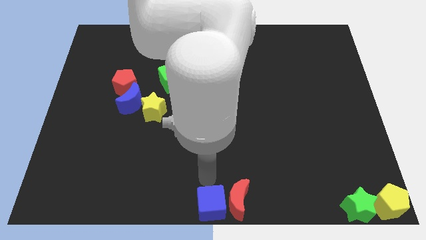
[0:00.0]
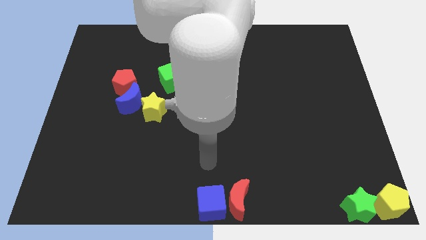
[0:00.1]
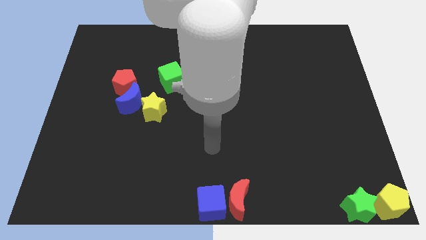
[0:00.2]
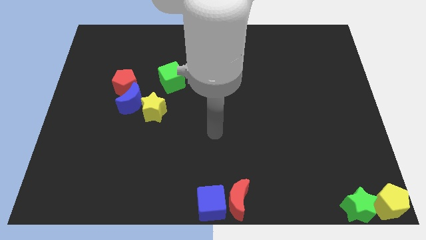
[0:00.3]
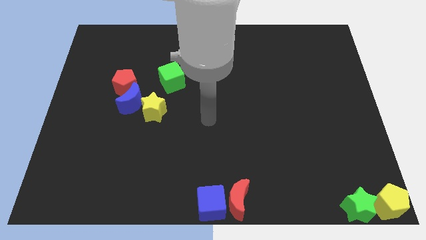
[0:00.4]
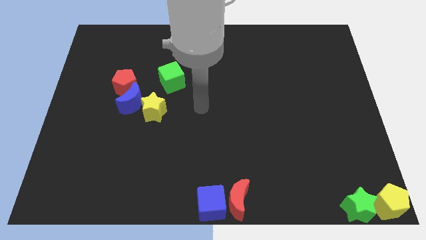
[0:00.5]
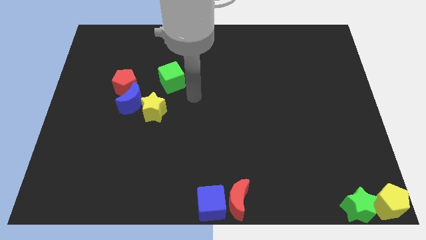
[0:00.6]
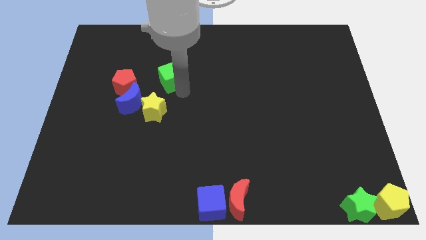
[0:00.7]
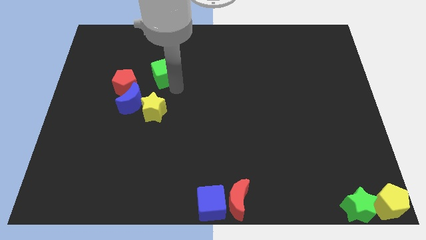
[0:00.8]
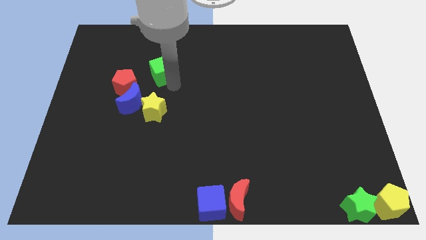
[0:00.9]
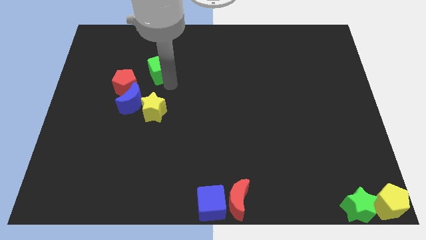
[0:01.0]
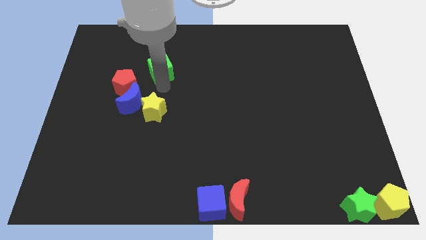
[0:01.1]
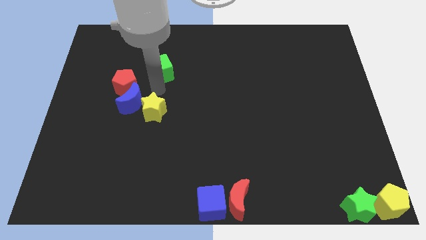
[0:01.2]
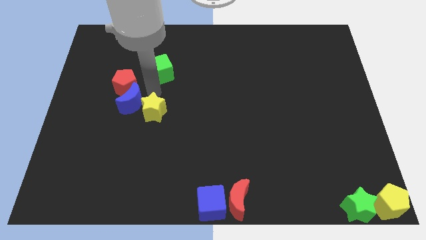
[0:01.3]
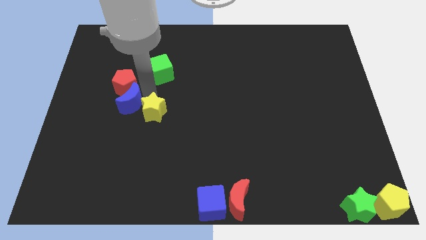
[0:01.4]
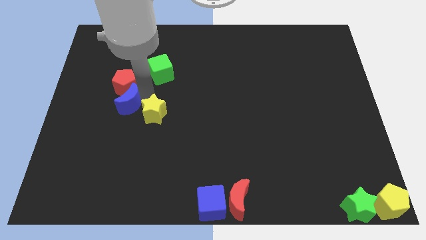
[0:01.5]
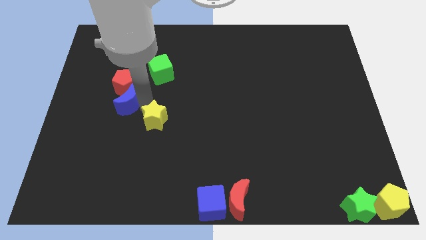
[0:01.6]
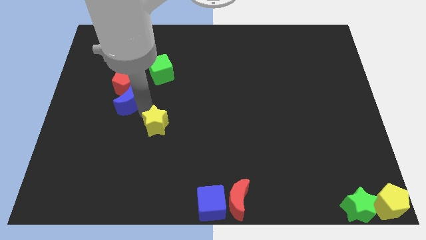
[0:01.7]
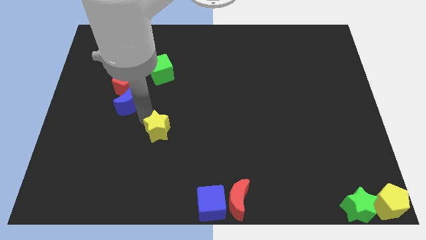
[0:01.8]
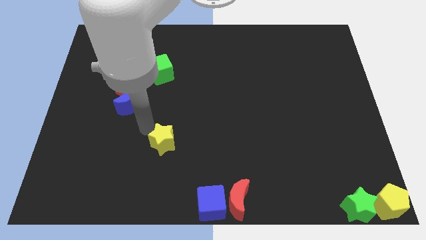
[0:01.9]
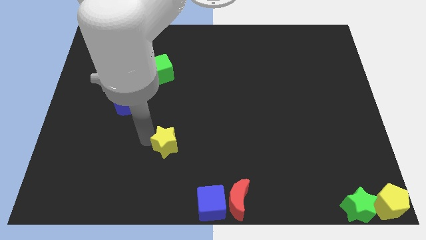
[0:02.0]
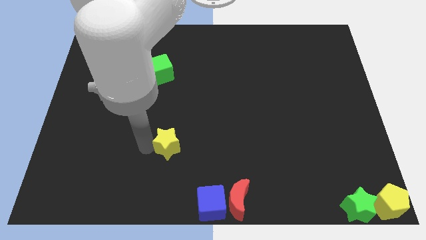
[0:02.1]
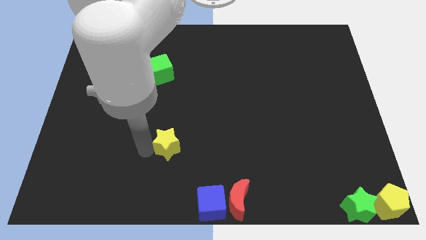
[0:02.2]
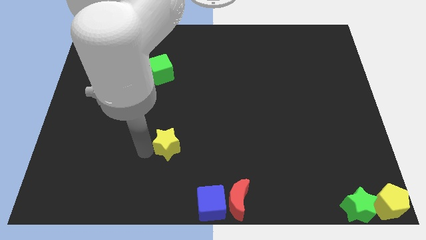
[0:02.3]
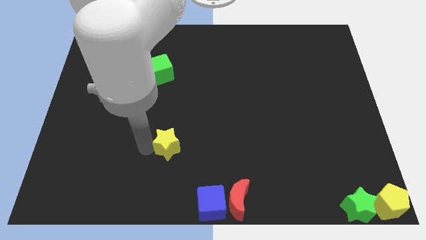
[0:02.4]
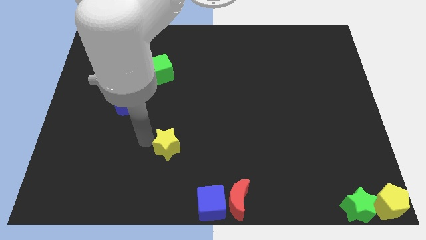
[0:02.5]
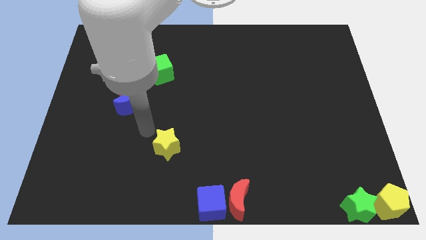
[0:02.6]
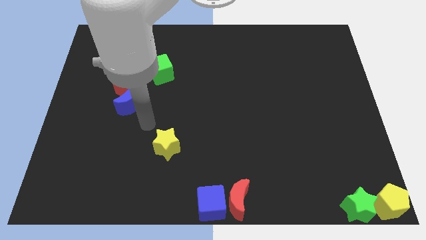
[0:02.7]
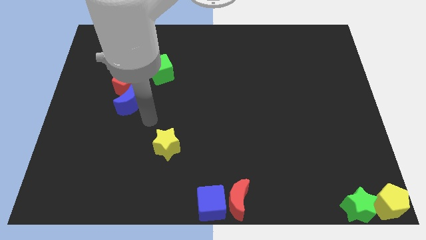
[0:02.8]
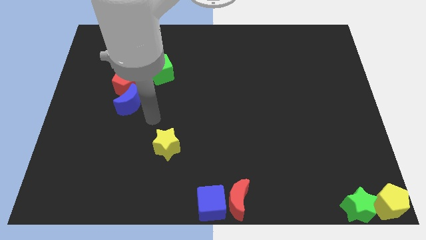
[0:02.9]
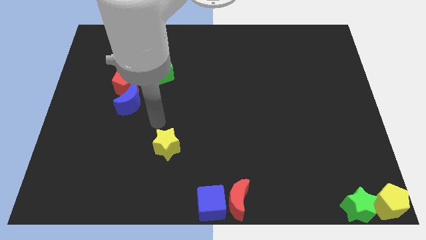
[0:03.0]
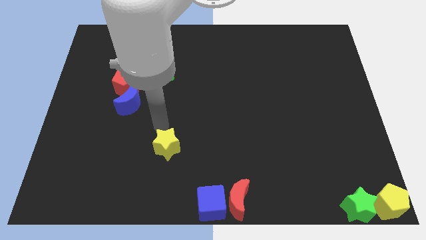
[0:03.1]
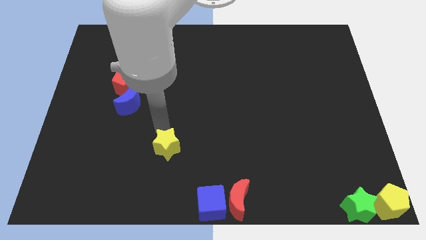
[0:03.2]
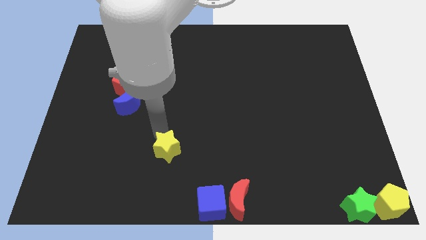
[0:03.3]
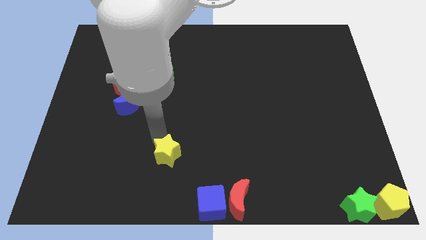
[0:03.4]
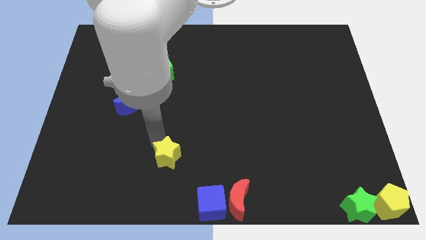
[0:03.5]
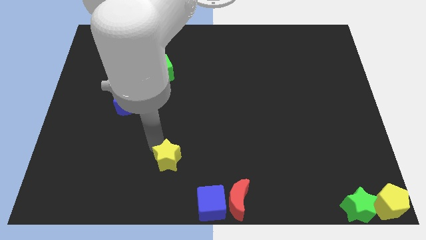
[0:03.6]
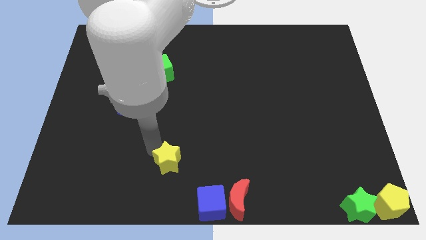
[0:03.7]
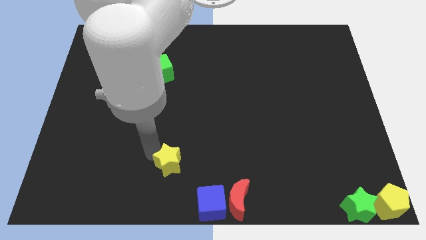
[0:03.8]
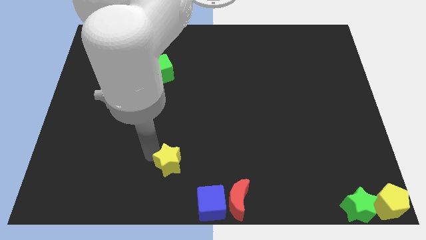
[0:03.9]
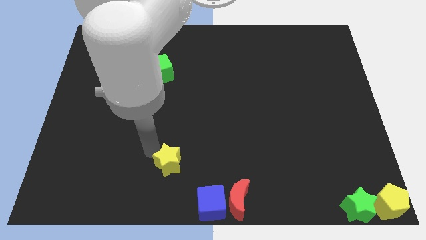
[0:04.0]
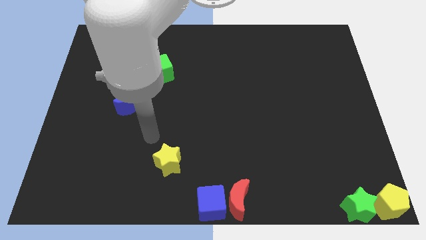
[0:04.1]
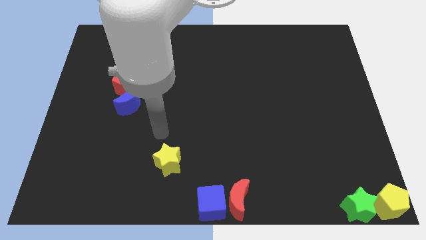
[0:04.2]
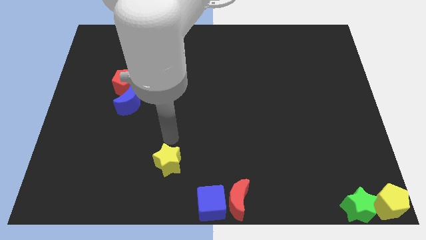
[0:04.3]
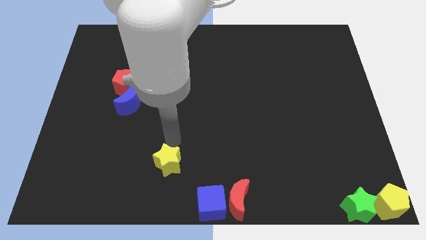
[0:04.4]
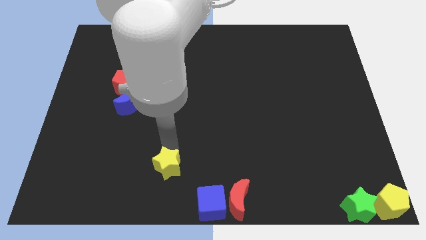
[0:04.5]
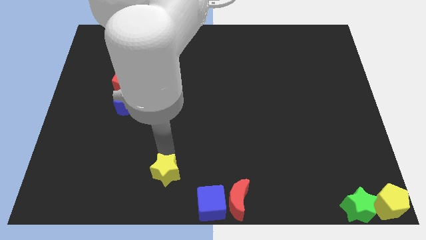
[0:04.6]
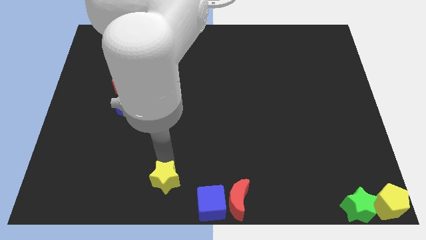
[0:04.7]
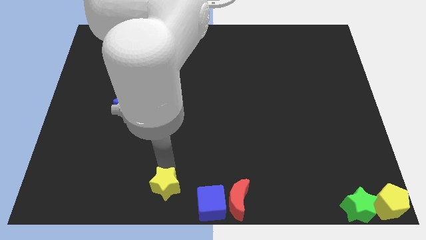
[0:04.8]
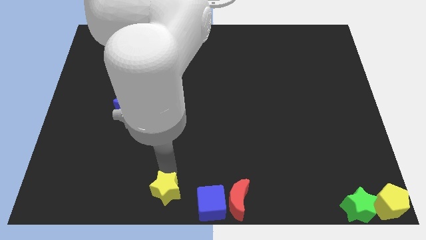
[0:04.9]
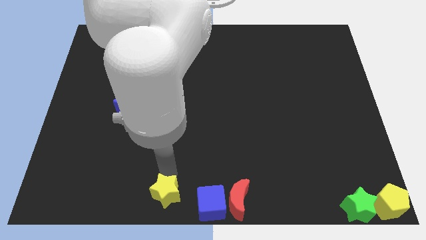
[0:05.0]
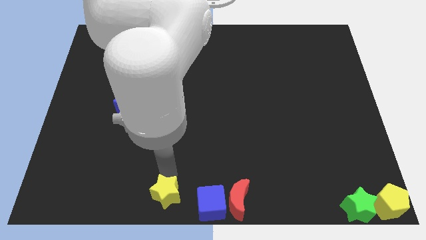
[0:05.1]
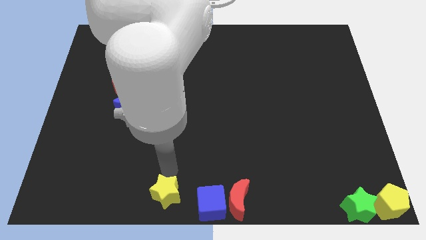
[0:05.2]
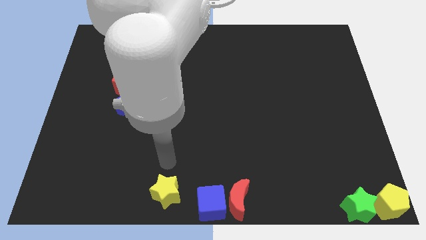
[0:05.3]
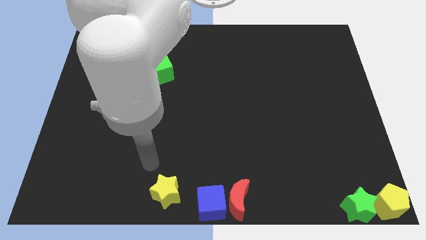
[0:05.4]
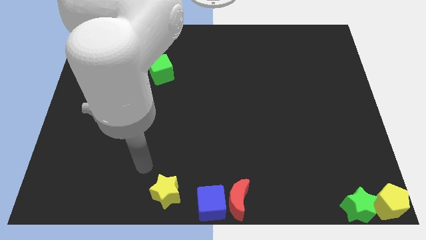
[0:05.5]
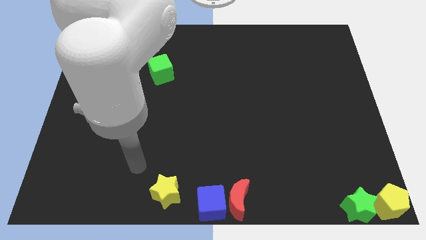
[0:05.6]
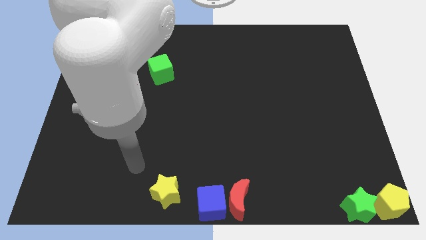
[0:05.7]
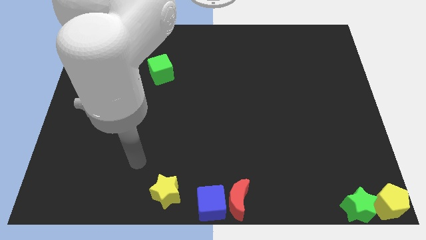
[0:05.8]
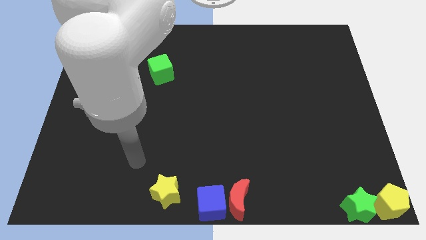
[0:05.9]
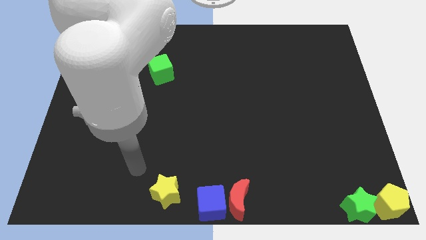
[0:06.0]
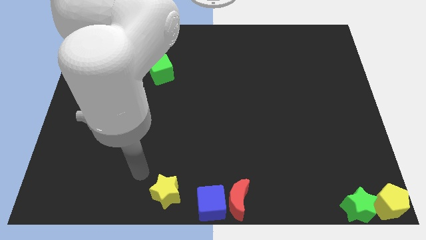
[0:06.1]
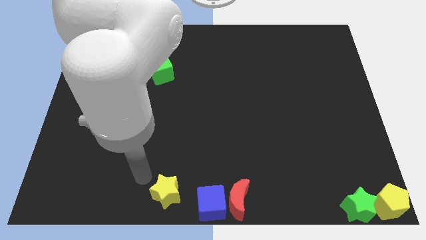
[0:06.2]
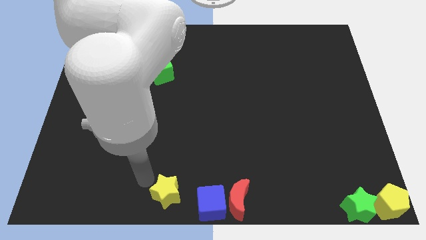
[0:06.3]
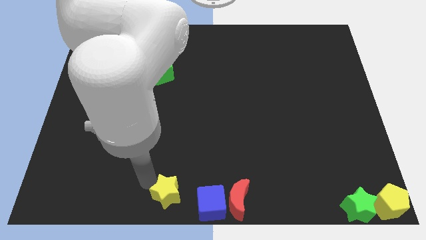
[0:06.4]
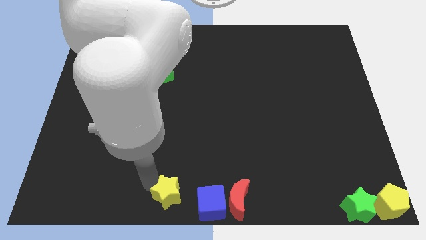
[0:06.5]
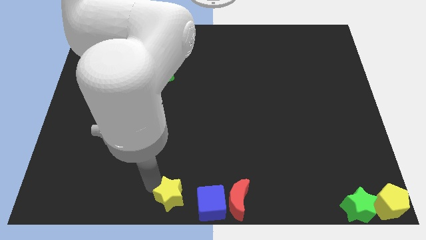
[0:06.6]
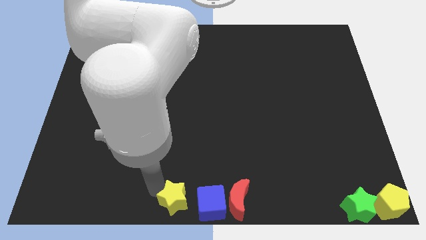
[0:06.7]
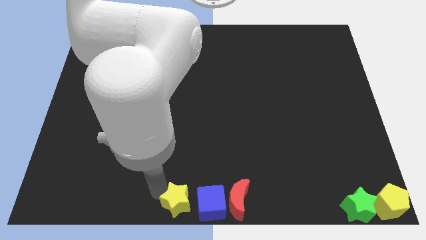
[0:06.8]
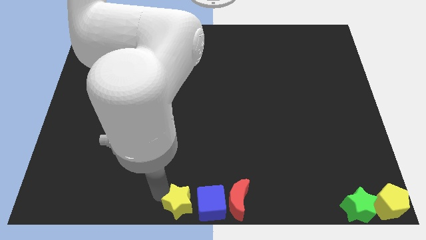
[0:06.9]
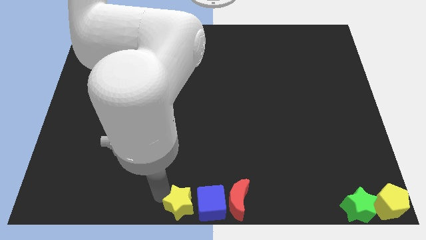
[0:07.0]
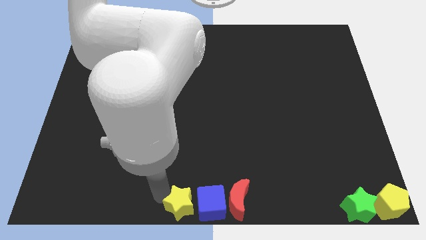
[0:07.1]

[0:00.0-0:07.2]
move the yellow star to the left of the blue cube

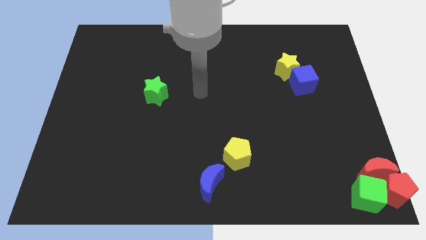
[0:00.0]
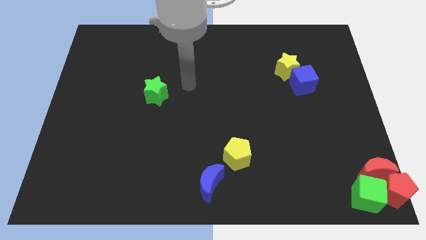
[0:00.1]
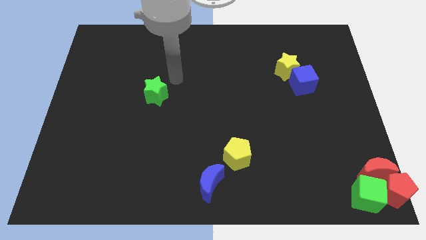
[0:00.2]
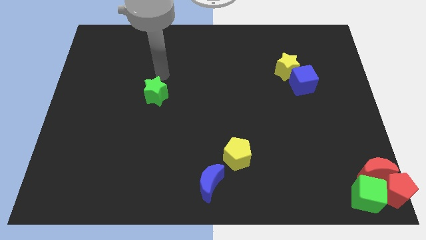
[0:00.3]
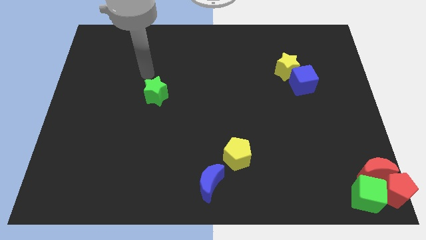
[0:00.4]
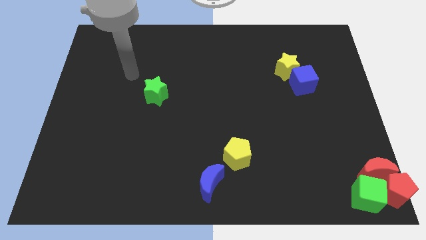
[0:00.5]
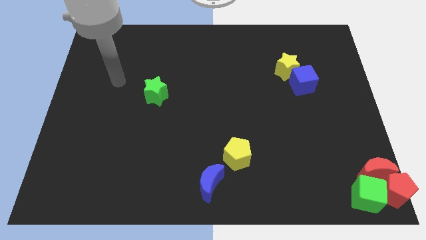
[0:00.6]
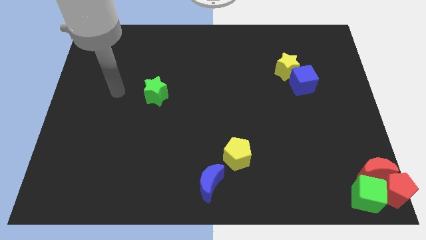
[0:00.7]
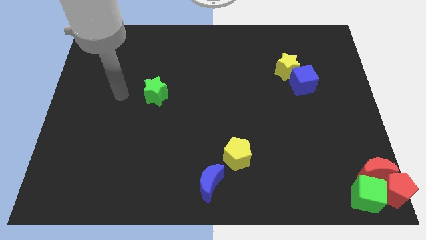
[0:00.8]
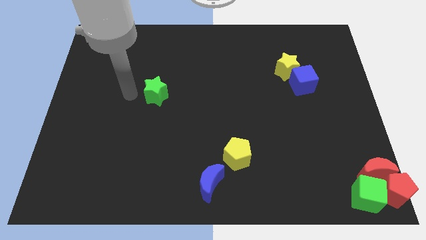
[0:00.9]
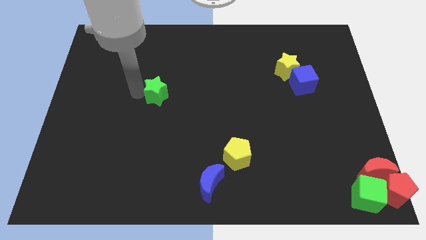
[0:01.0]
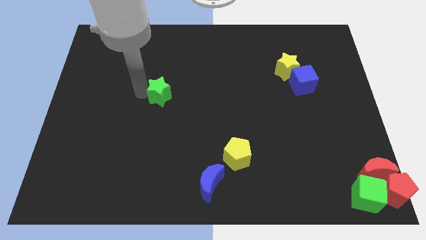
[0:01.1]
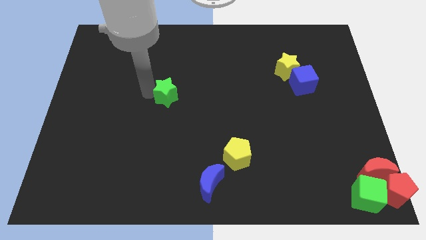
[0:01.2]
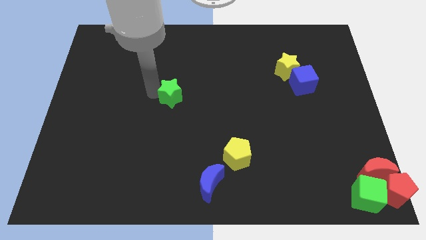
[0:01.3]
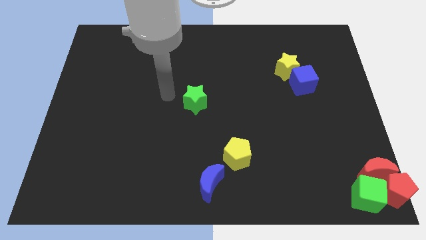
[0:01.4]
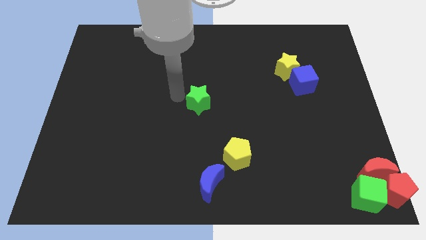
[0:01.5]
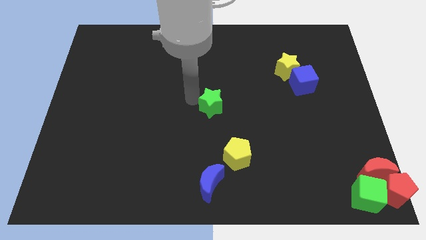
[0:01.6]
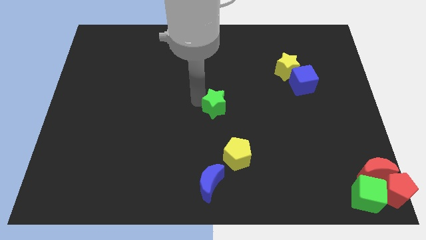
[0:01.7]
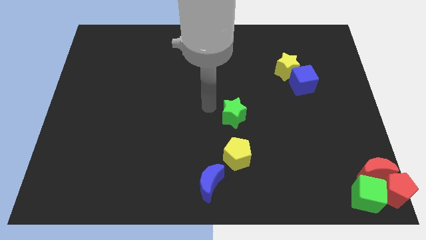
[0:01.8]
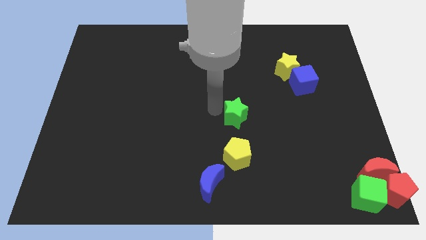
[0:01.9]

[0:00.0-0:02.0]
push green star above yellow pentagon
